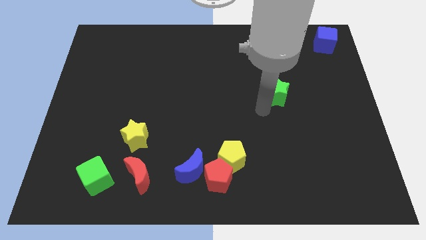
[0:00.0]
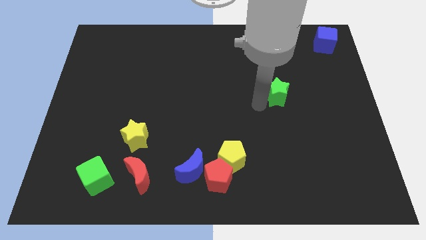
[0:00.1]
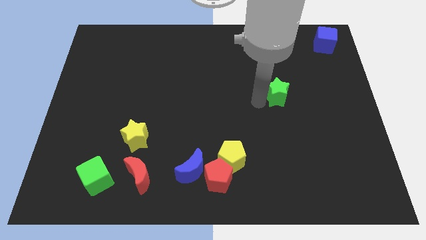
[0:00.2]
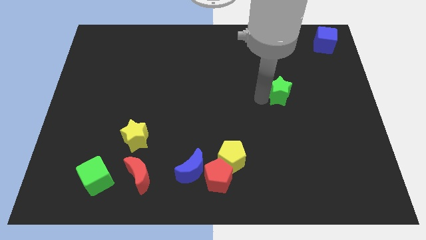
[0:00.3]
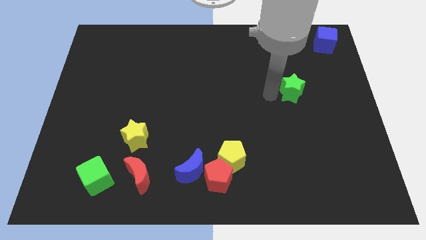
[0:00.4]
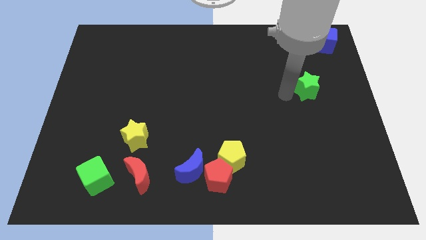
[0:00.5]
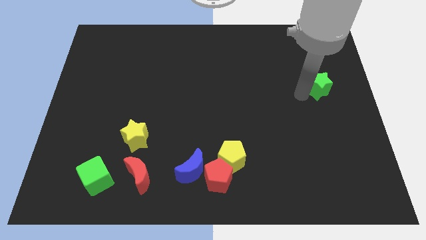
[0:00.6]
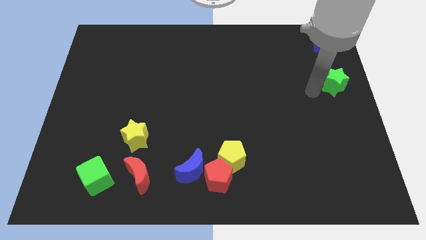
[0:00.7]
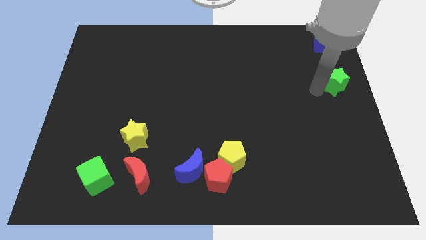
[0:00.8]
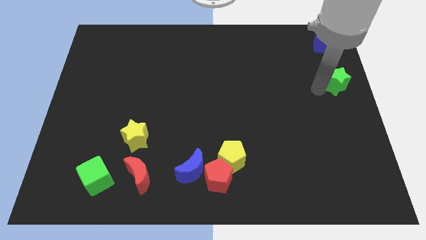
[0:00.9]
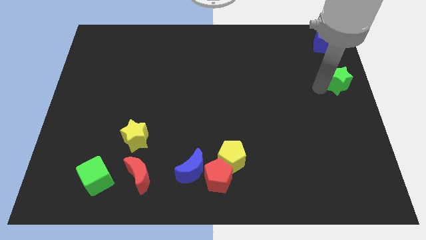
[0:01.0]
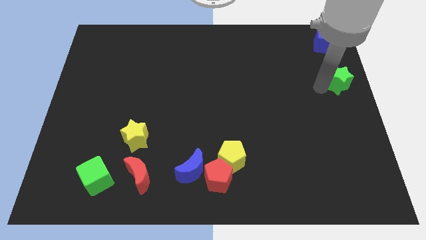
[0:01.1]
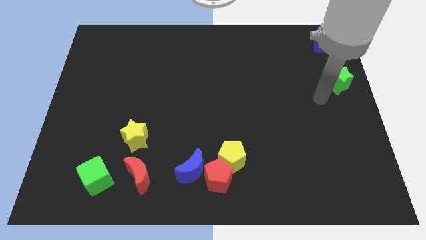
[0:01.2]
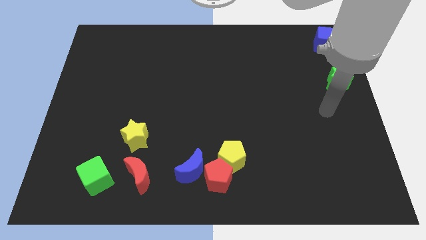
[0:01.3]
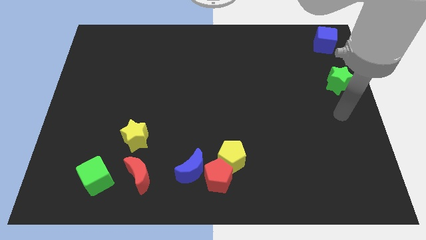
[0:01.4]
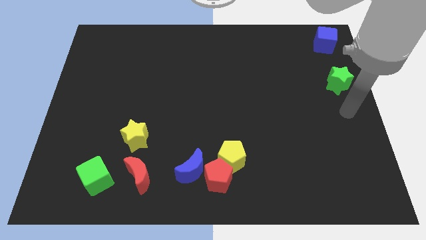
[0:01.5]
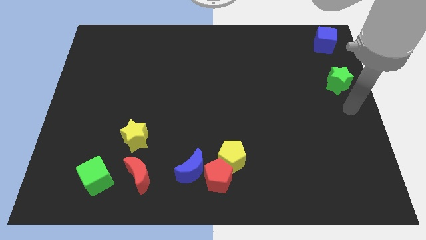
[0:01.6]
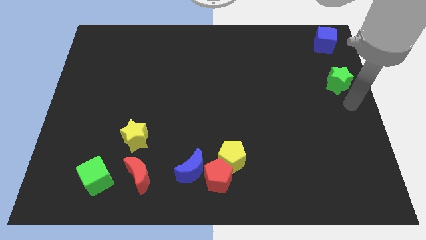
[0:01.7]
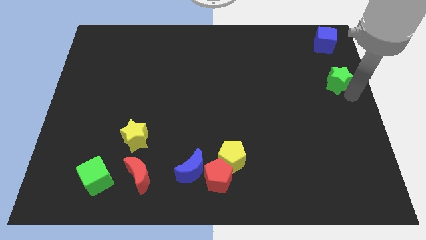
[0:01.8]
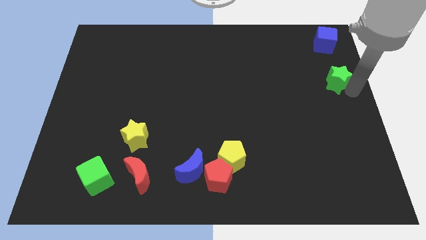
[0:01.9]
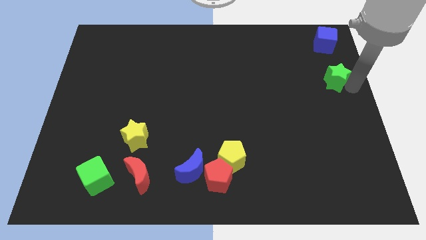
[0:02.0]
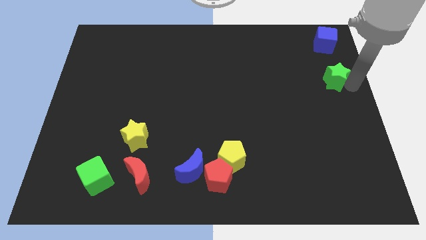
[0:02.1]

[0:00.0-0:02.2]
move the green star below the blue cube

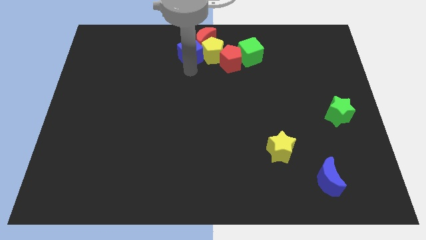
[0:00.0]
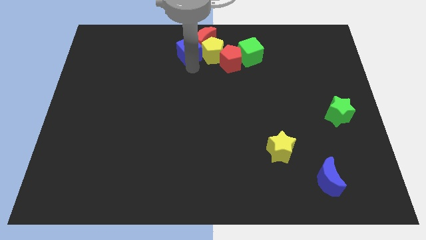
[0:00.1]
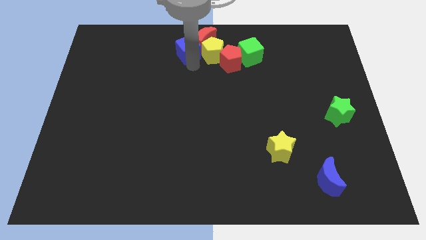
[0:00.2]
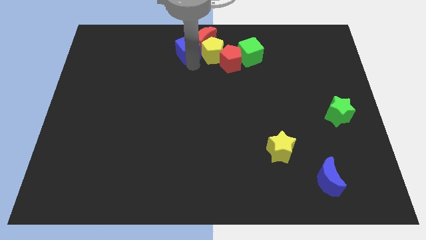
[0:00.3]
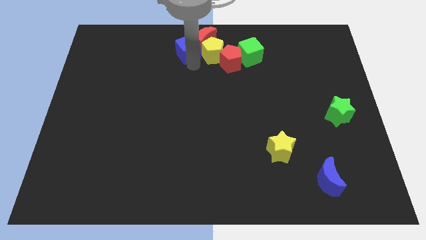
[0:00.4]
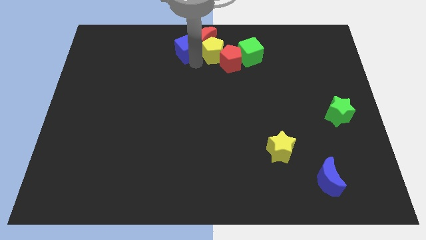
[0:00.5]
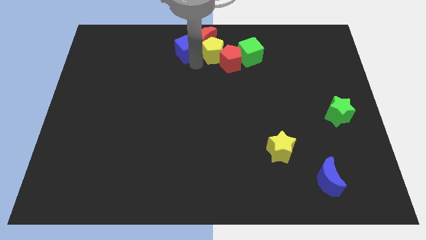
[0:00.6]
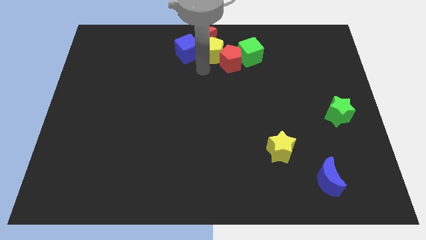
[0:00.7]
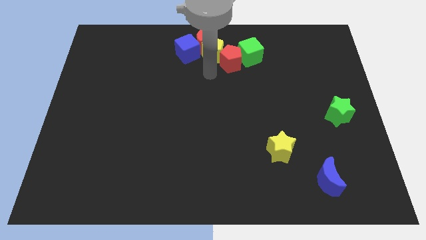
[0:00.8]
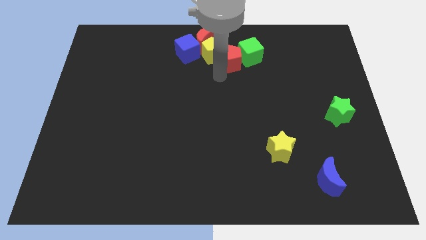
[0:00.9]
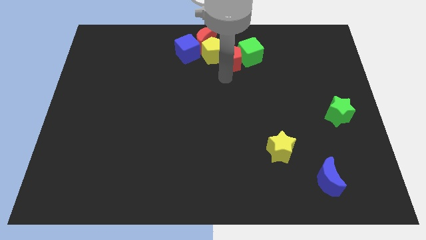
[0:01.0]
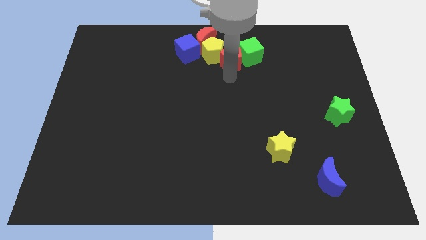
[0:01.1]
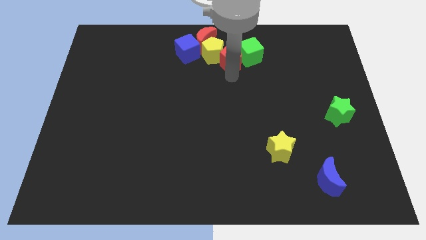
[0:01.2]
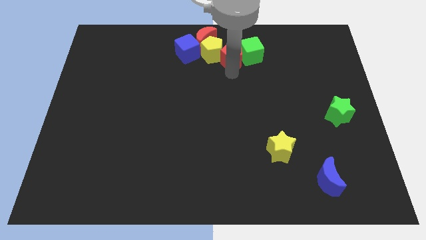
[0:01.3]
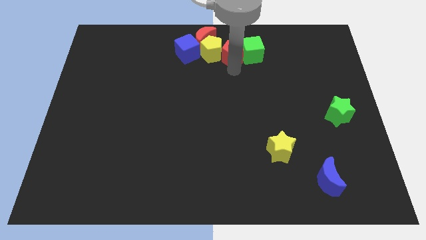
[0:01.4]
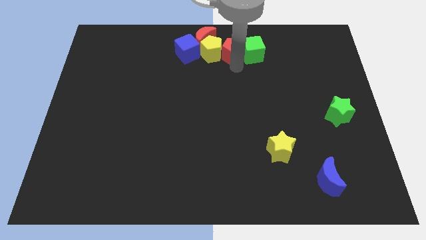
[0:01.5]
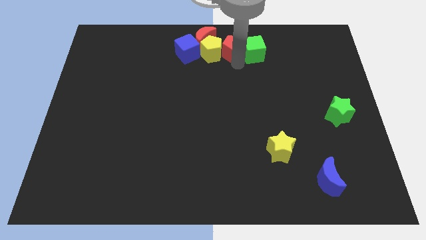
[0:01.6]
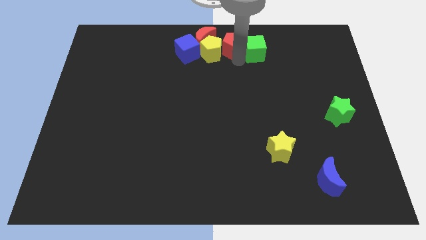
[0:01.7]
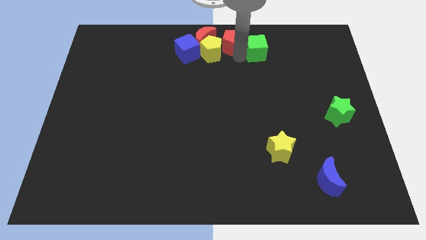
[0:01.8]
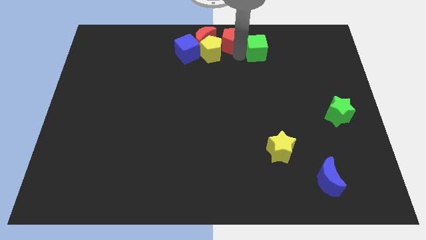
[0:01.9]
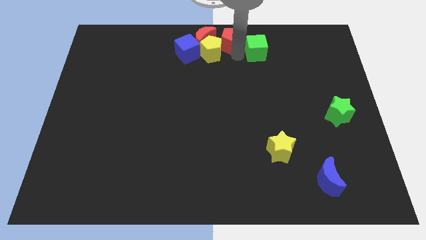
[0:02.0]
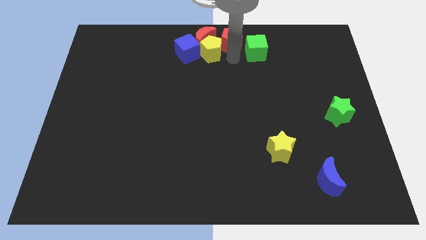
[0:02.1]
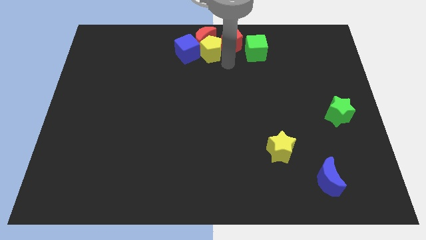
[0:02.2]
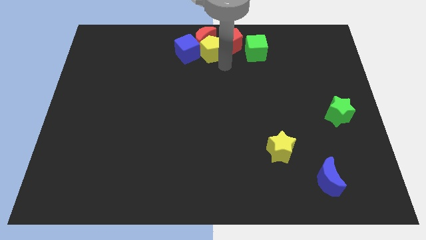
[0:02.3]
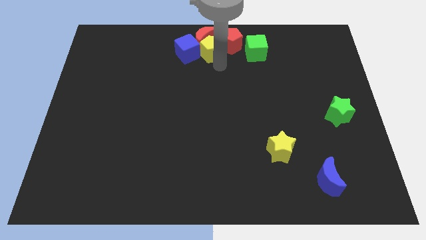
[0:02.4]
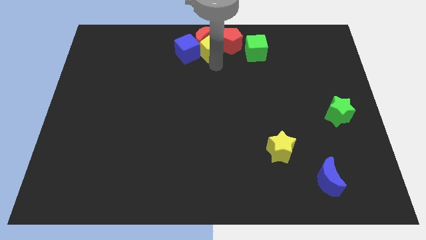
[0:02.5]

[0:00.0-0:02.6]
push the yellow pentagon into the group of red crescent and red pentagon

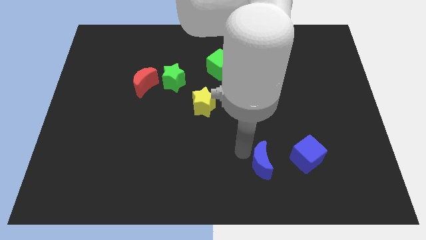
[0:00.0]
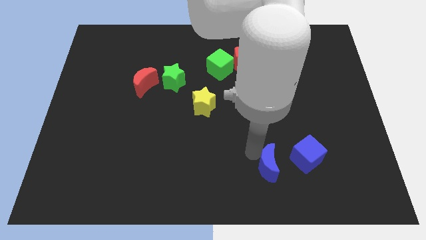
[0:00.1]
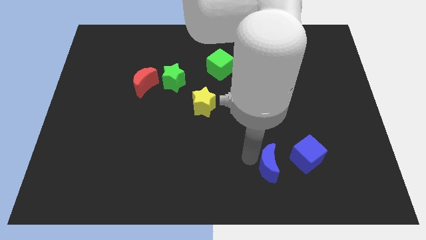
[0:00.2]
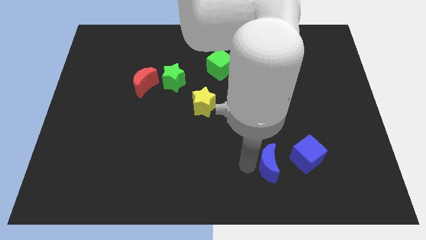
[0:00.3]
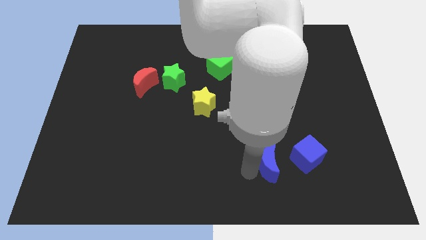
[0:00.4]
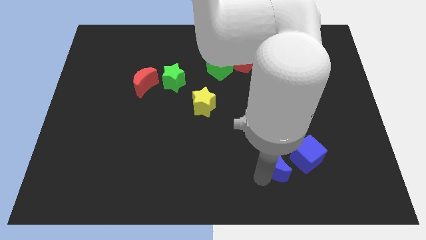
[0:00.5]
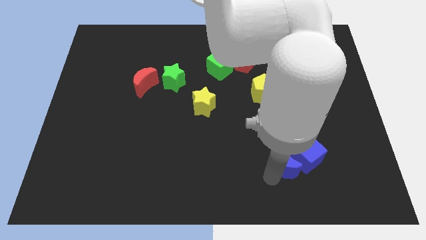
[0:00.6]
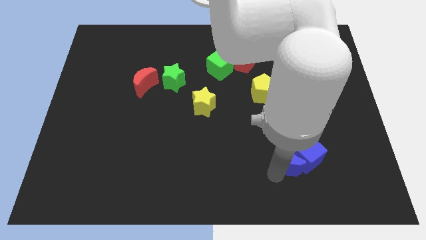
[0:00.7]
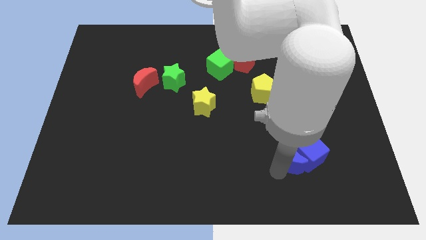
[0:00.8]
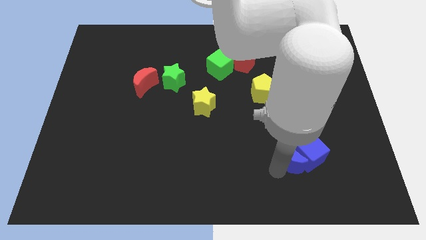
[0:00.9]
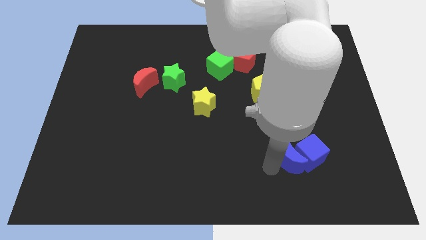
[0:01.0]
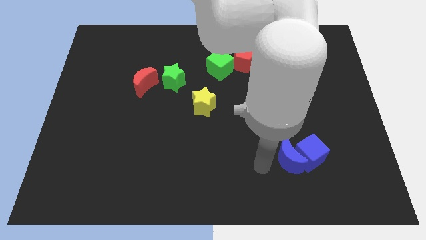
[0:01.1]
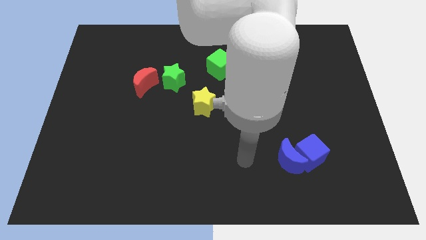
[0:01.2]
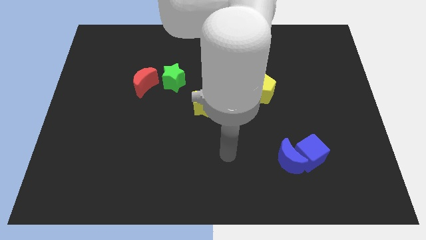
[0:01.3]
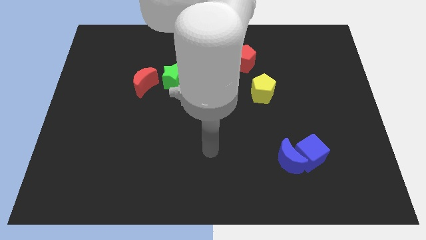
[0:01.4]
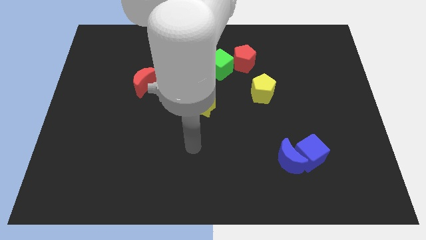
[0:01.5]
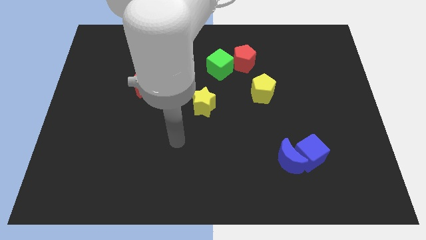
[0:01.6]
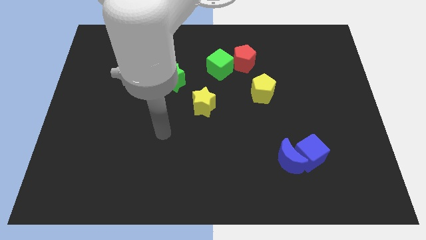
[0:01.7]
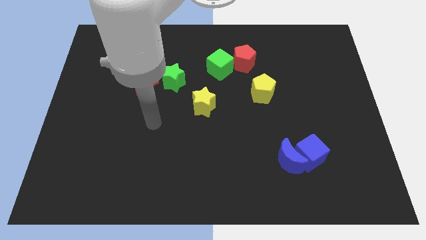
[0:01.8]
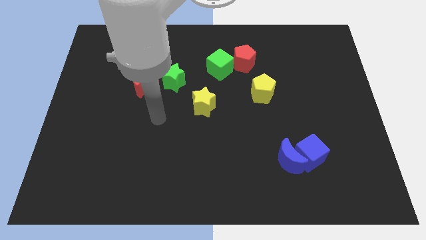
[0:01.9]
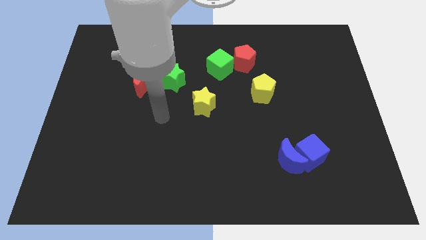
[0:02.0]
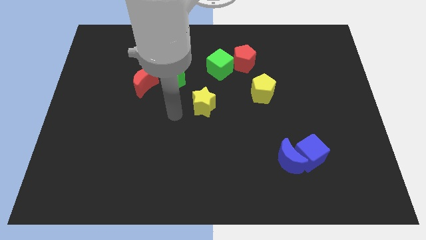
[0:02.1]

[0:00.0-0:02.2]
place the blue crescent left to blue cube

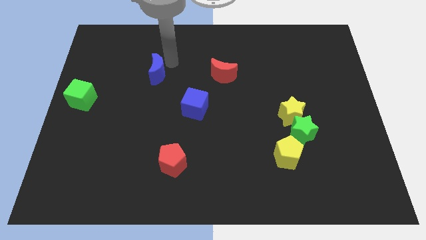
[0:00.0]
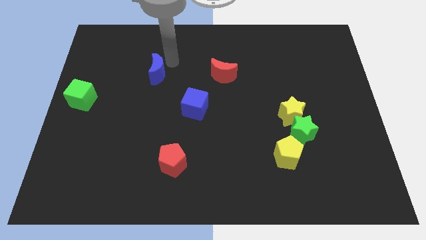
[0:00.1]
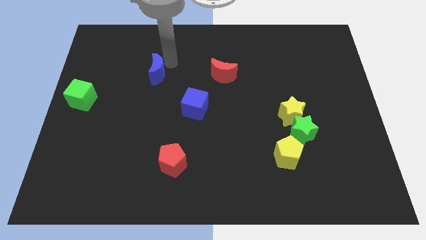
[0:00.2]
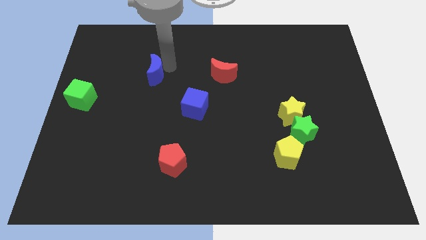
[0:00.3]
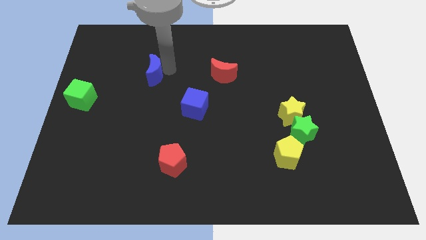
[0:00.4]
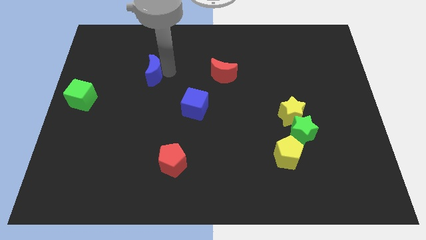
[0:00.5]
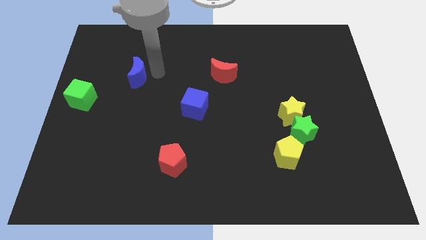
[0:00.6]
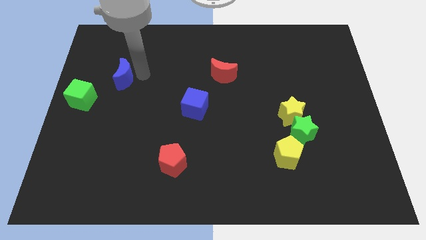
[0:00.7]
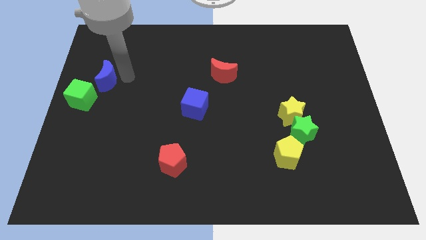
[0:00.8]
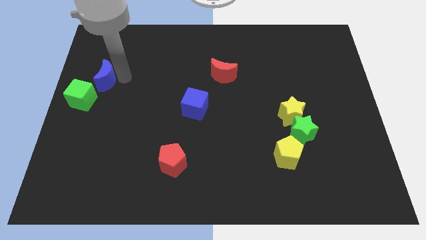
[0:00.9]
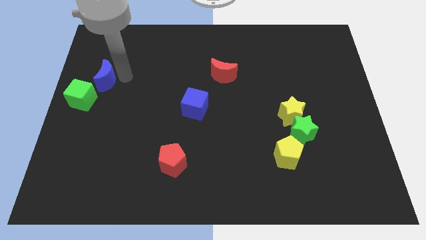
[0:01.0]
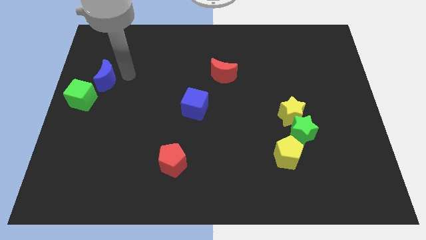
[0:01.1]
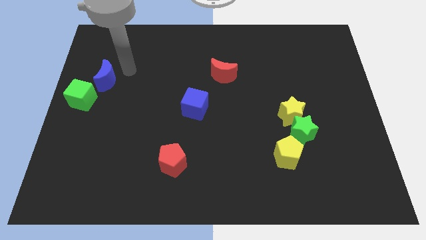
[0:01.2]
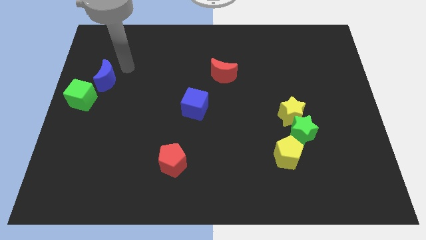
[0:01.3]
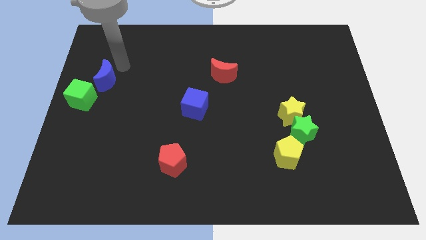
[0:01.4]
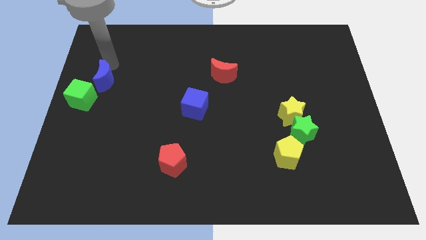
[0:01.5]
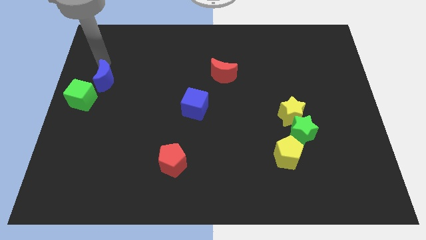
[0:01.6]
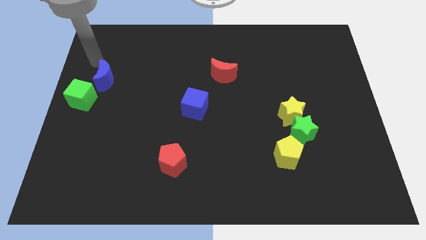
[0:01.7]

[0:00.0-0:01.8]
push the blue moon to the left side of the board

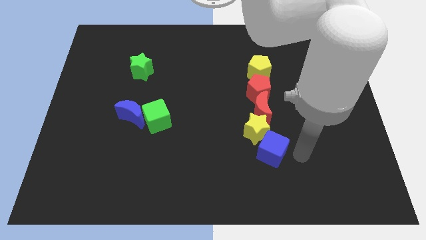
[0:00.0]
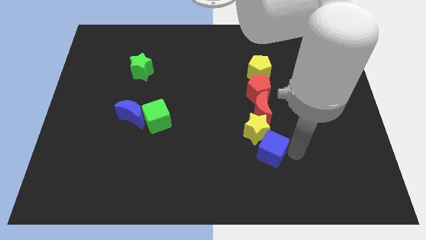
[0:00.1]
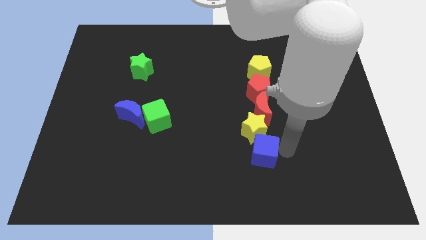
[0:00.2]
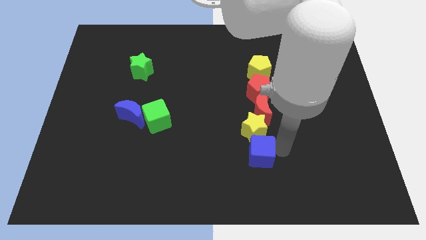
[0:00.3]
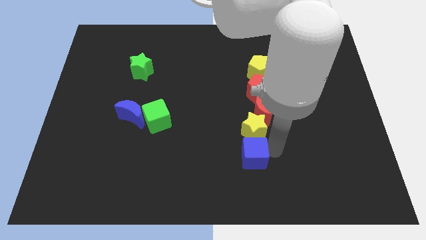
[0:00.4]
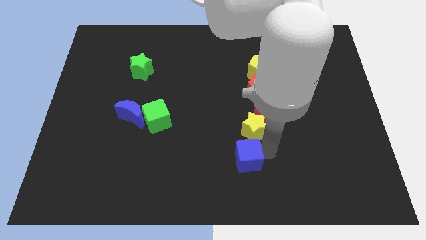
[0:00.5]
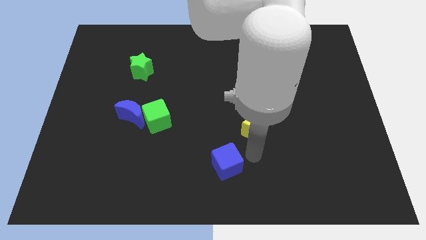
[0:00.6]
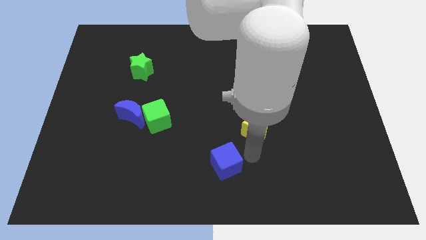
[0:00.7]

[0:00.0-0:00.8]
separate the blue cube from the yellow star
